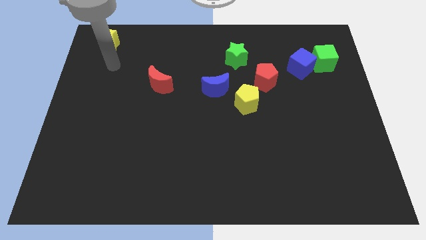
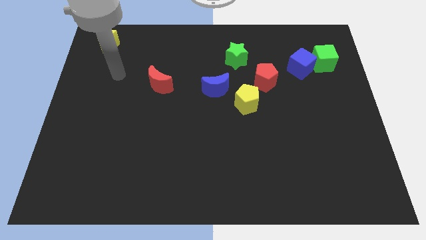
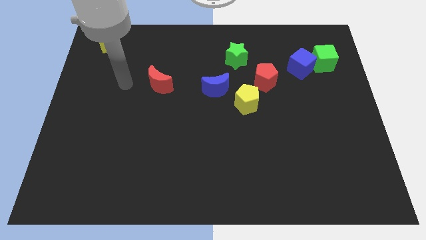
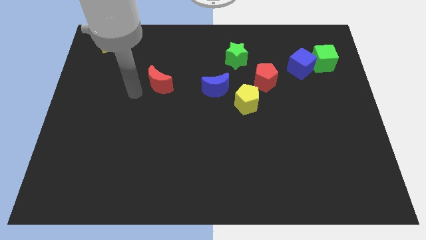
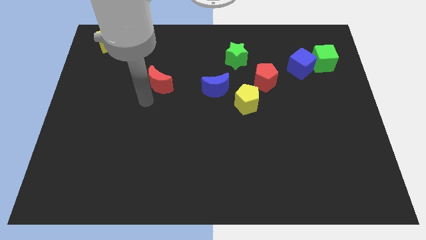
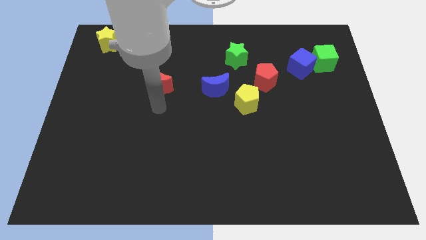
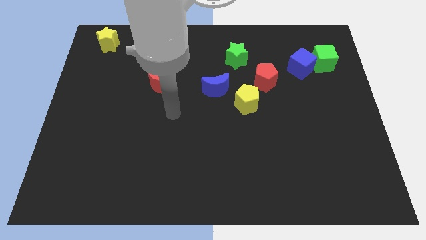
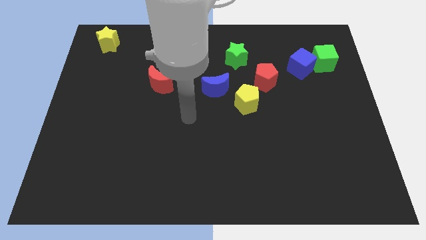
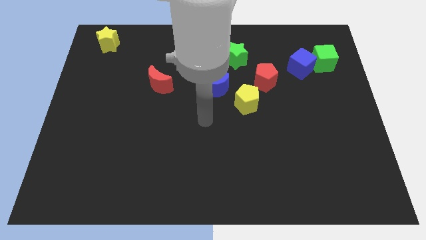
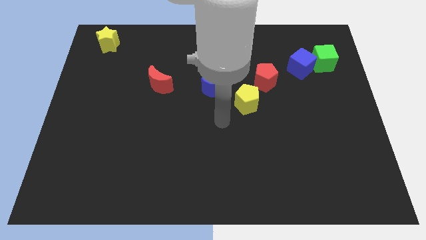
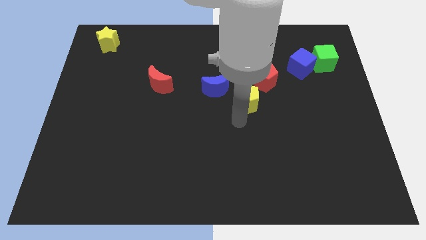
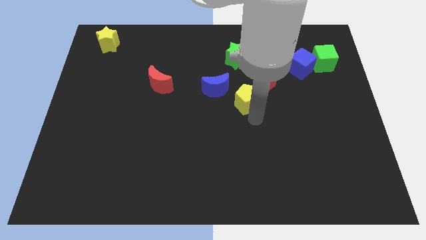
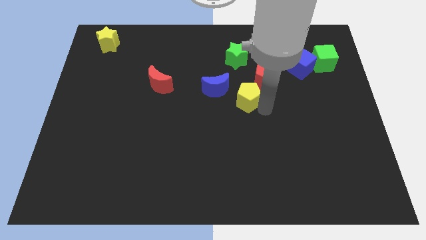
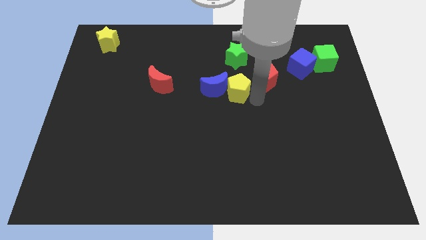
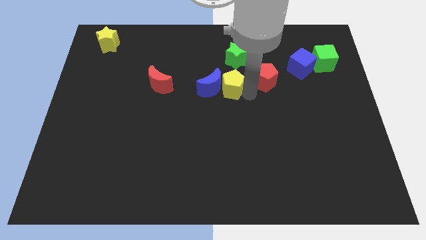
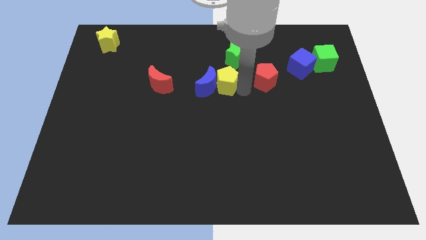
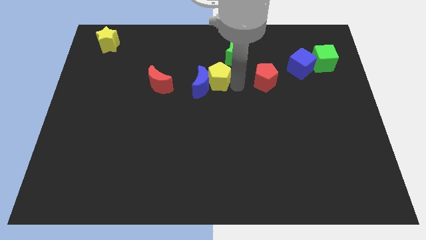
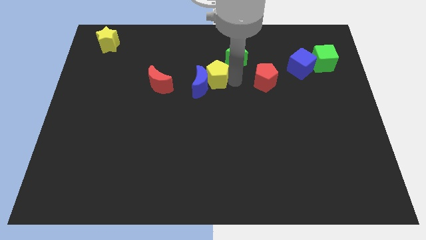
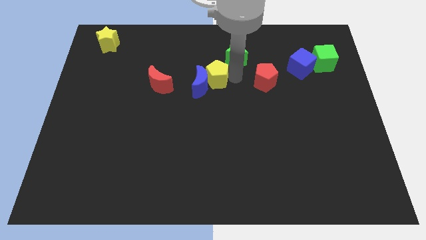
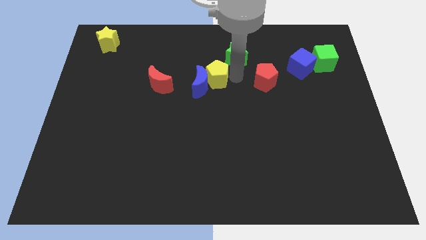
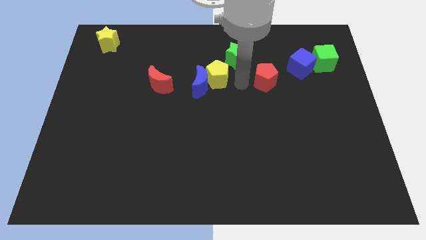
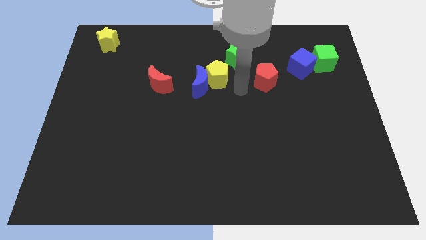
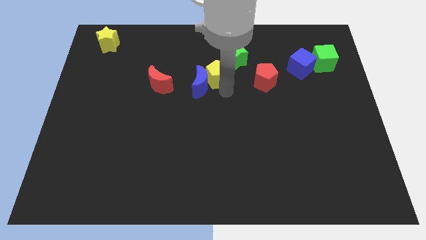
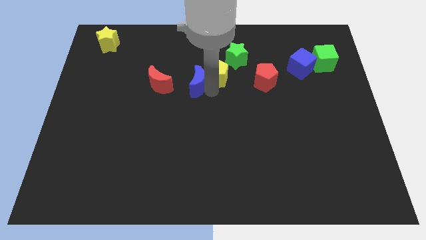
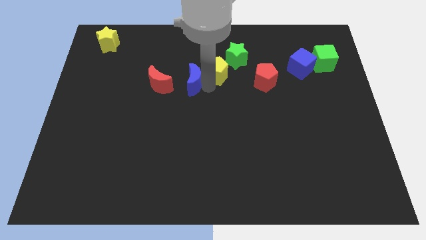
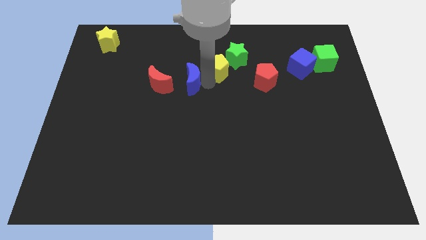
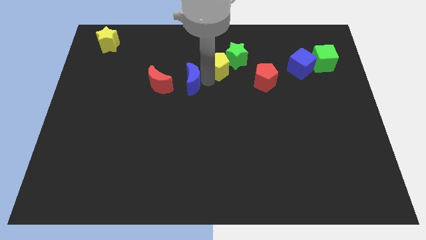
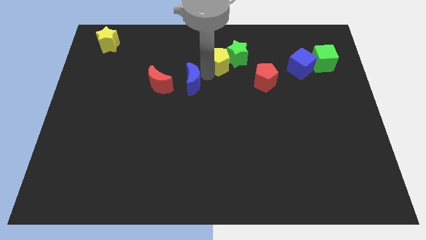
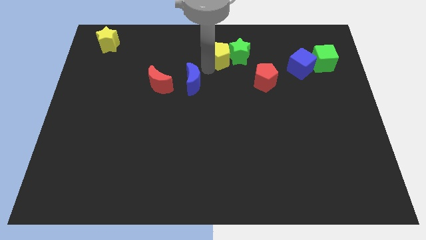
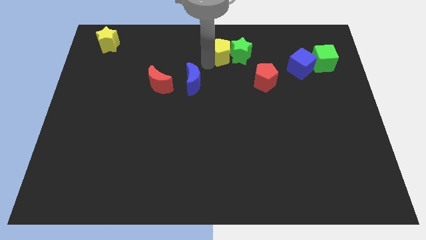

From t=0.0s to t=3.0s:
move the yellow pentagon to the left of the green star

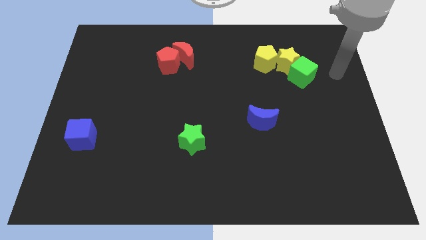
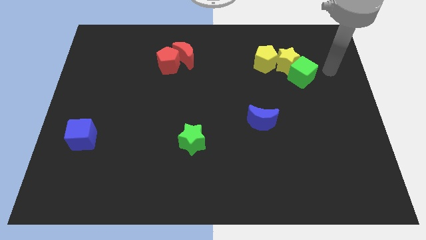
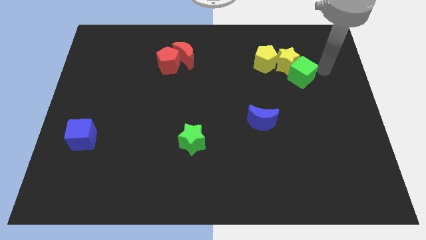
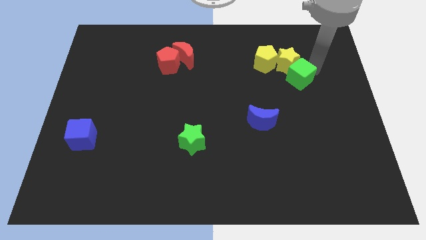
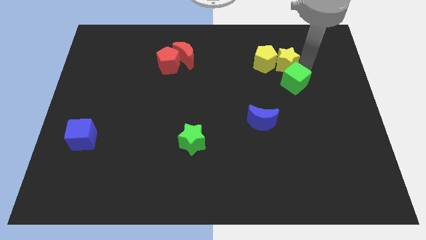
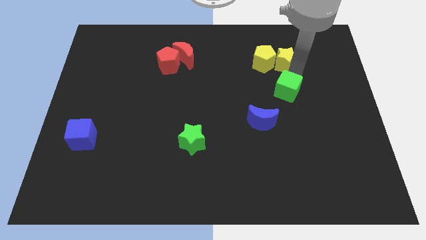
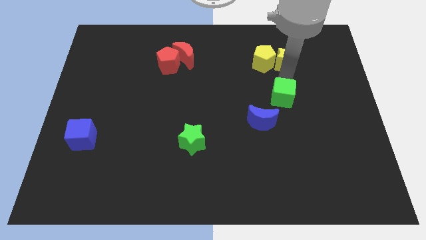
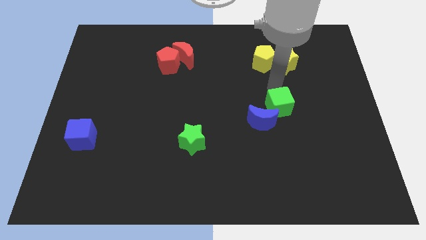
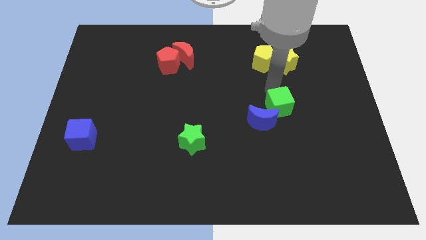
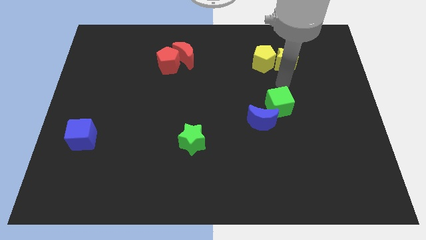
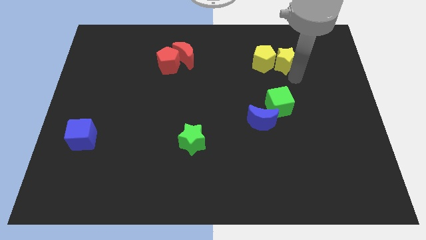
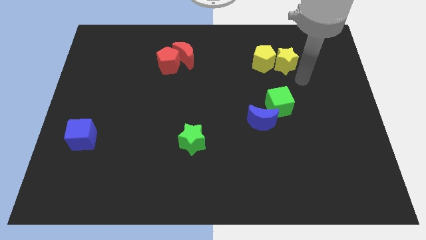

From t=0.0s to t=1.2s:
move the green cube to the top right of the blue crescent

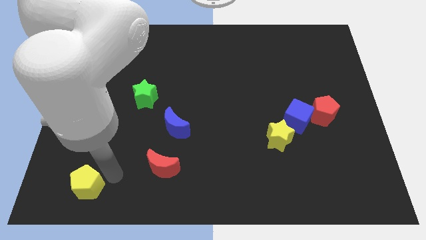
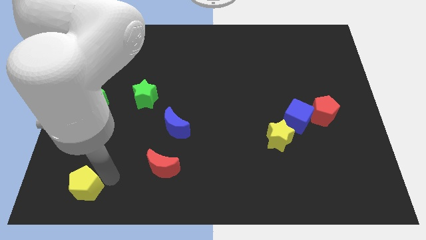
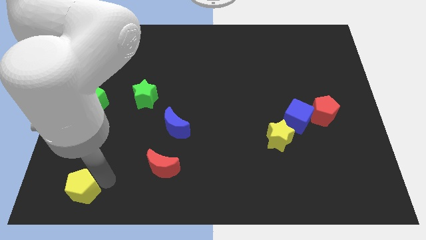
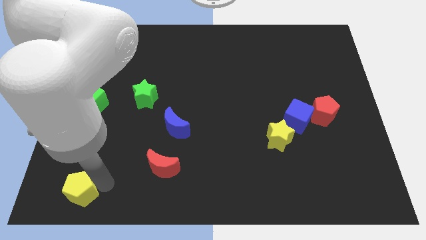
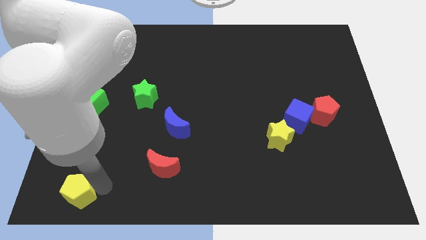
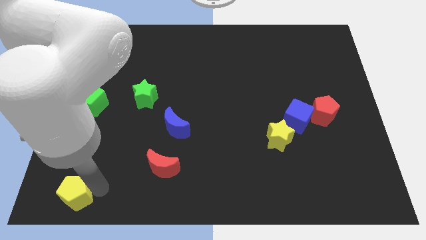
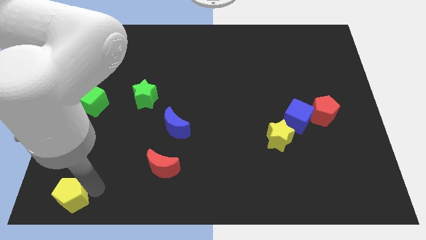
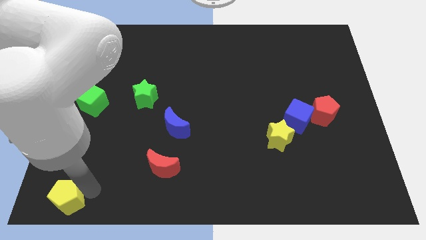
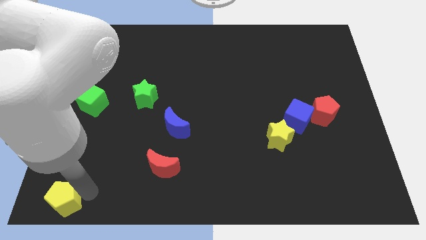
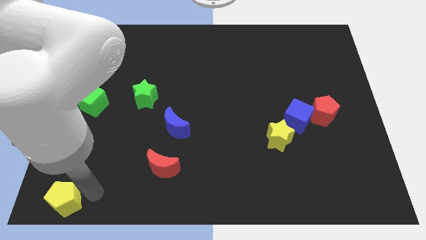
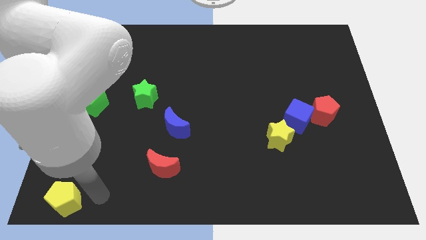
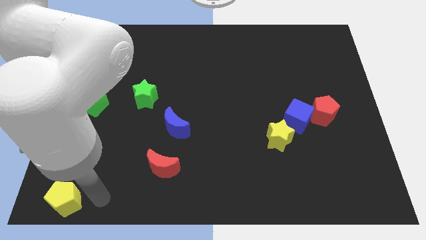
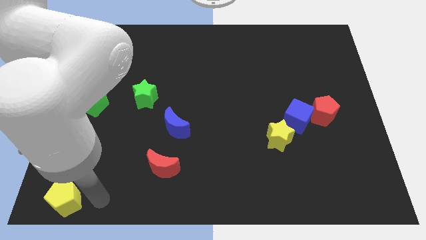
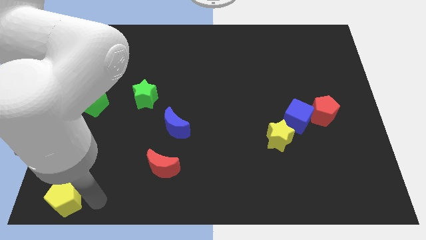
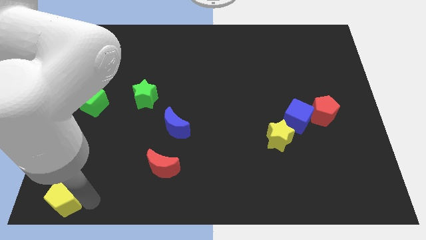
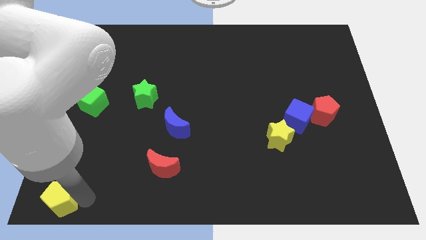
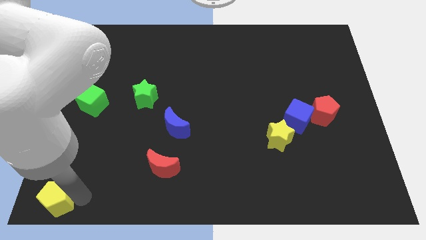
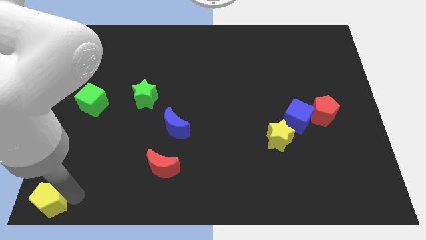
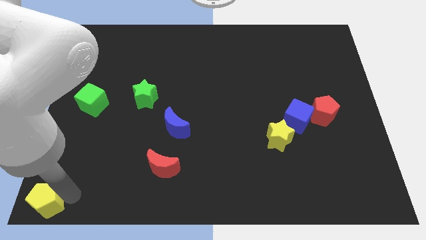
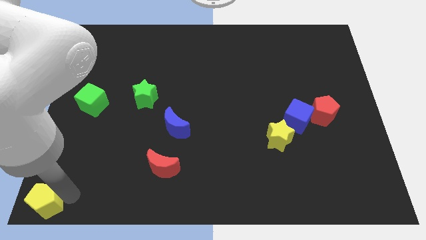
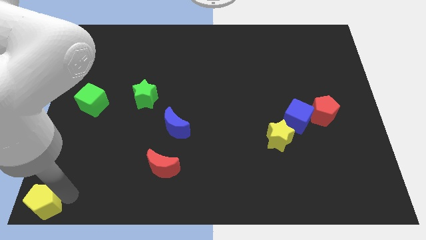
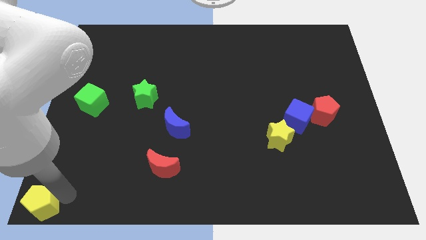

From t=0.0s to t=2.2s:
move the yellow pentagon at the bottom left corner of the board

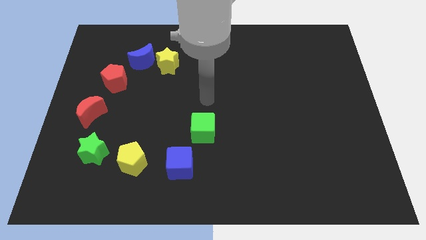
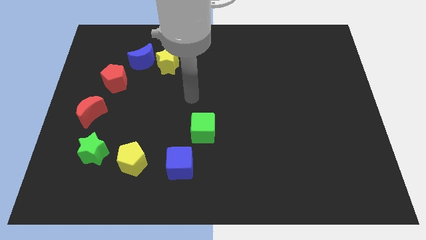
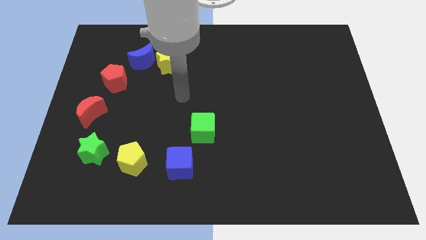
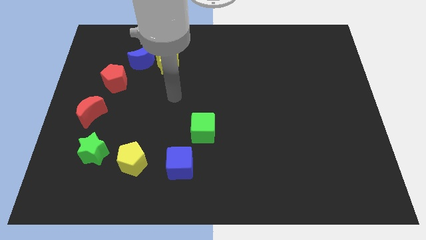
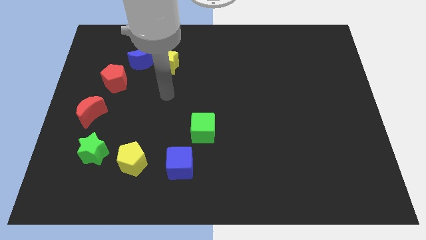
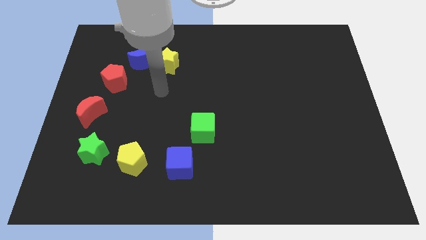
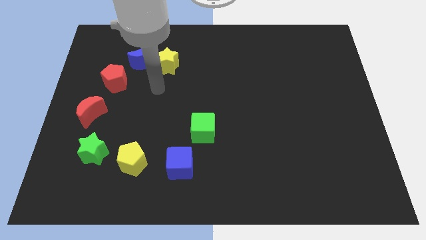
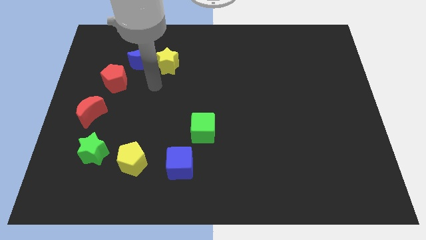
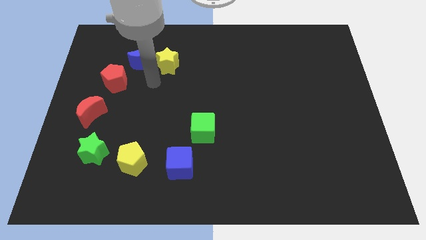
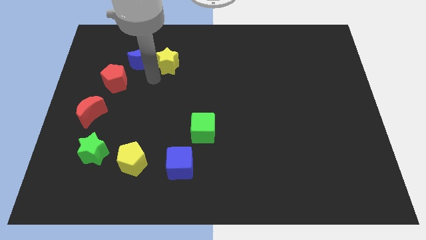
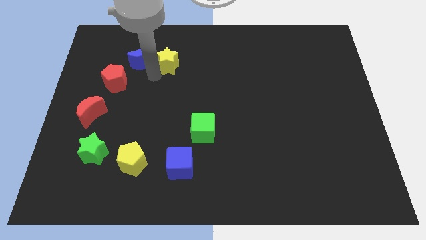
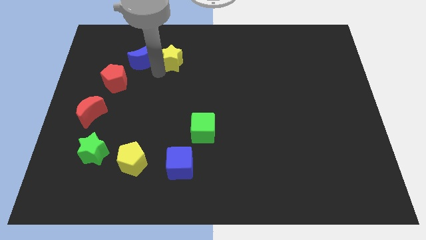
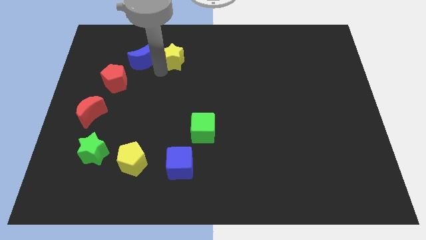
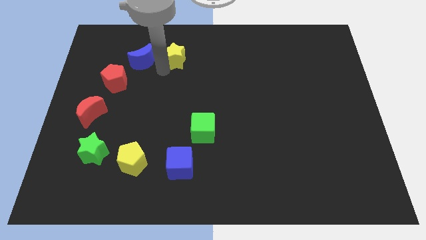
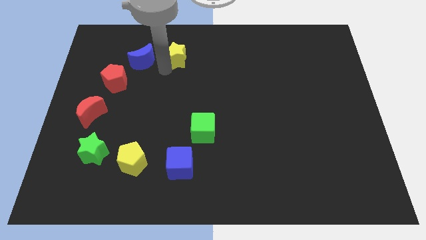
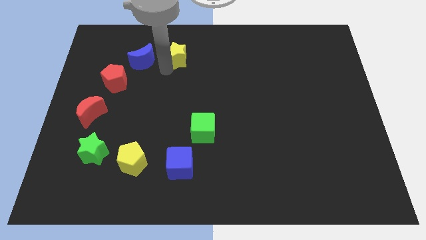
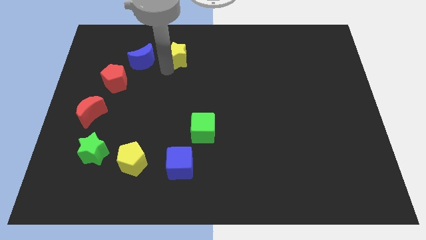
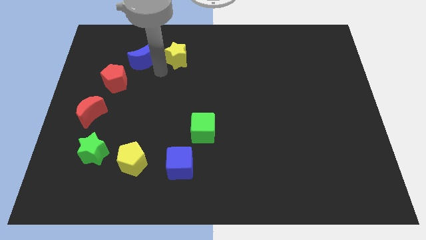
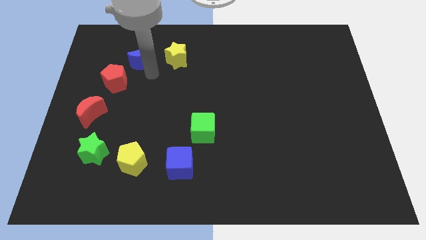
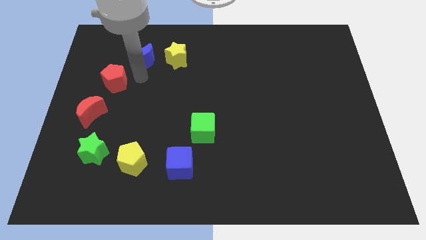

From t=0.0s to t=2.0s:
push the yellow star towards the top of the board

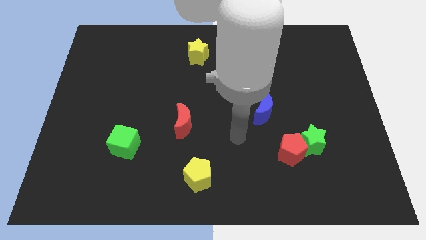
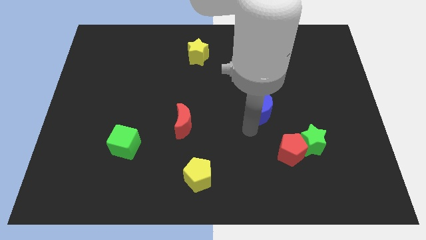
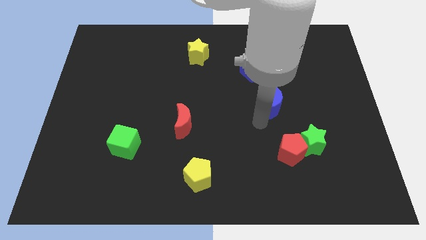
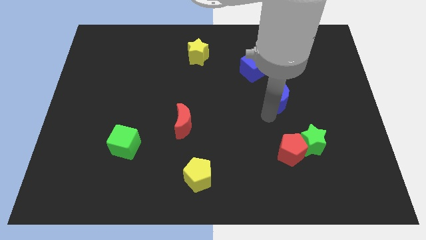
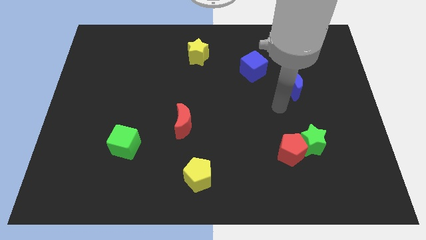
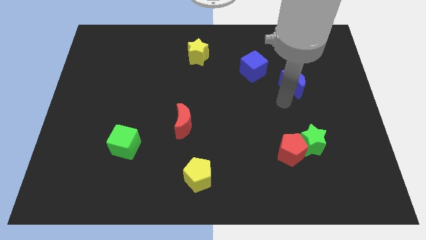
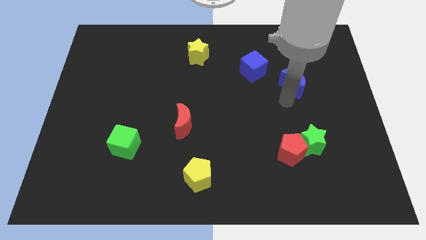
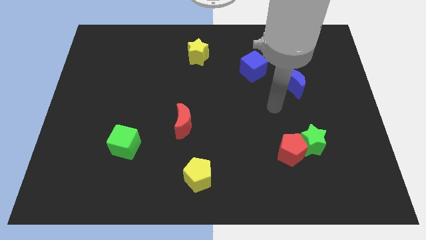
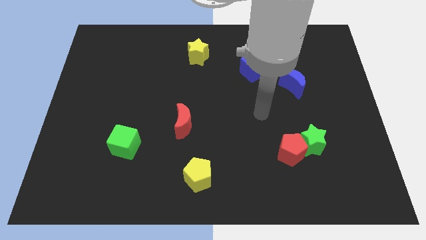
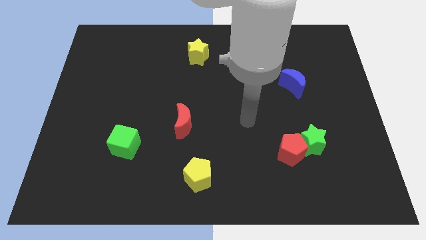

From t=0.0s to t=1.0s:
place the blue moon right to the blue cube
